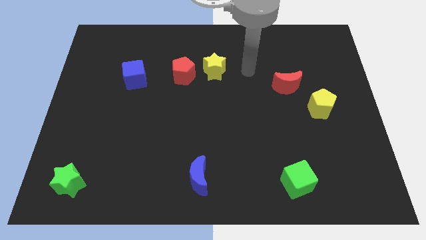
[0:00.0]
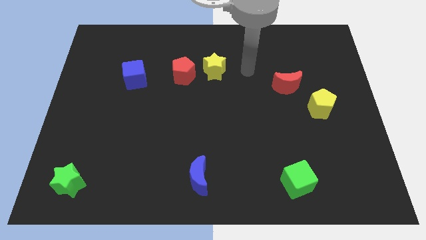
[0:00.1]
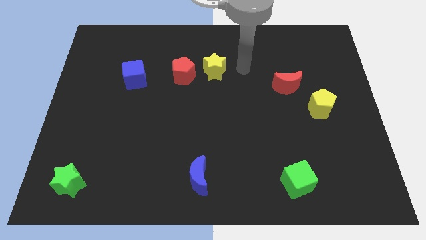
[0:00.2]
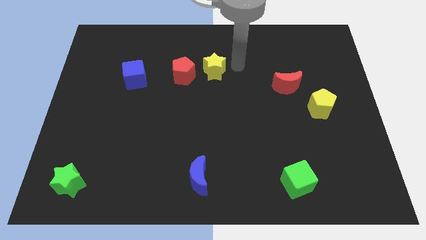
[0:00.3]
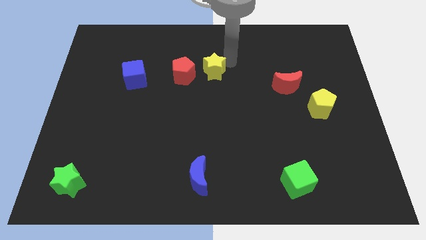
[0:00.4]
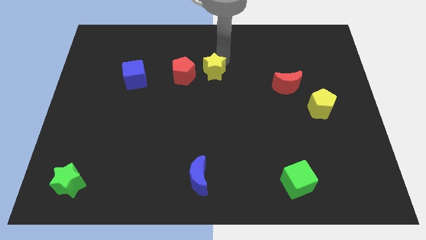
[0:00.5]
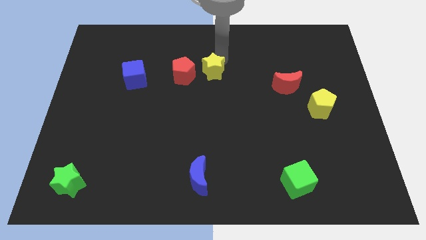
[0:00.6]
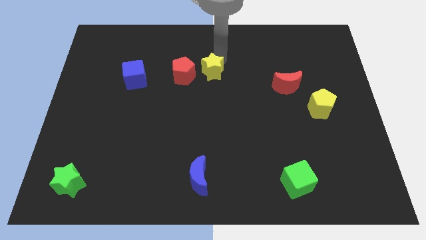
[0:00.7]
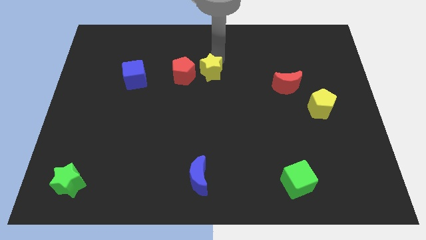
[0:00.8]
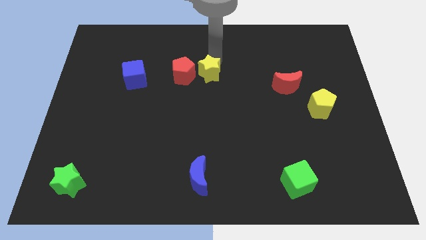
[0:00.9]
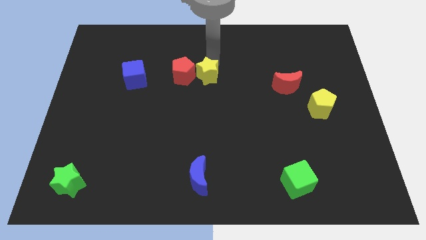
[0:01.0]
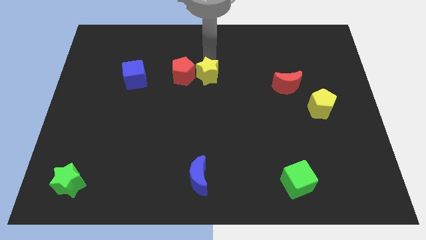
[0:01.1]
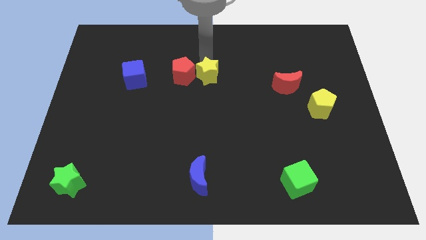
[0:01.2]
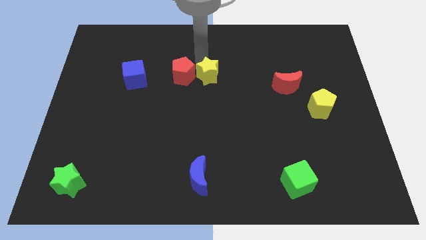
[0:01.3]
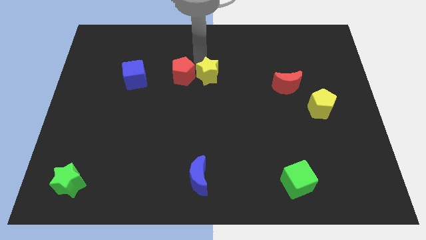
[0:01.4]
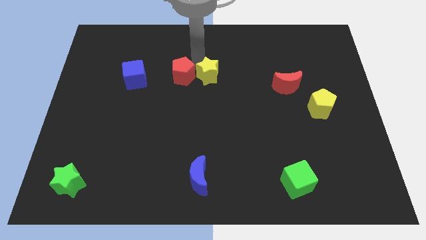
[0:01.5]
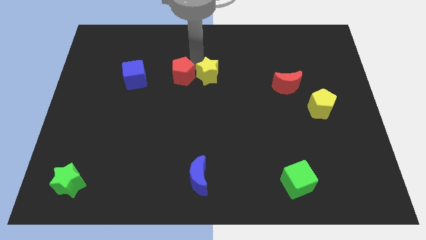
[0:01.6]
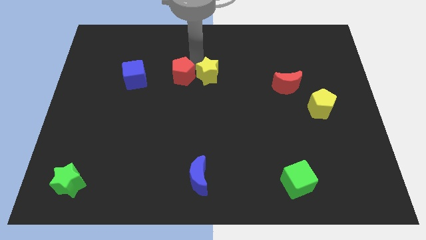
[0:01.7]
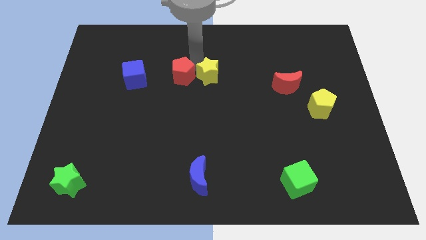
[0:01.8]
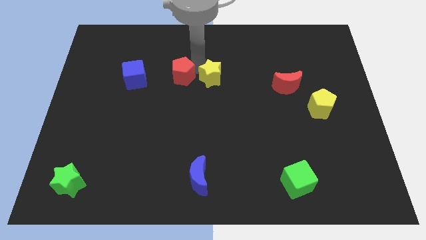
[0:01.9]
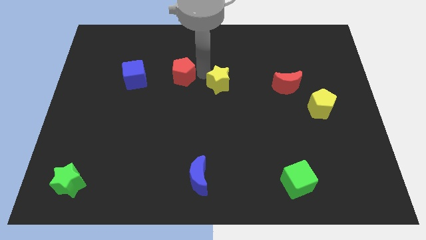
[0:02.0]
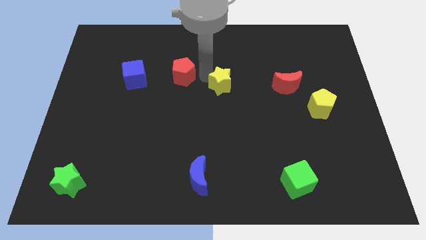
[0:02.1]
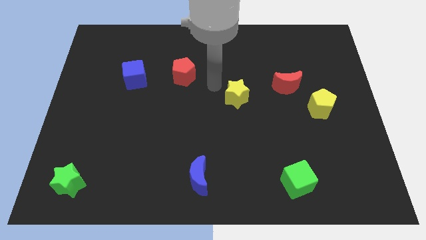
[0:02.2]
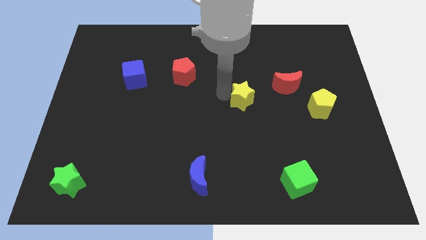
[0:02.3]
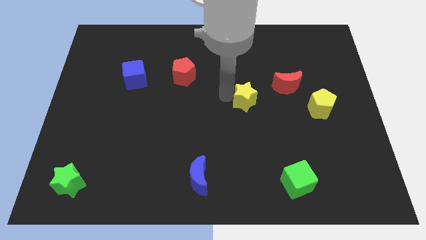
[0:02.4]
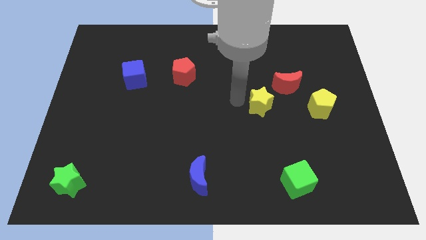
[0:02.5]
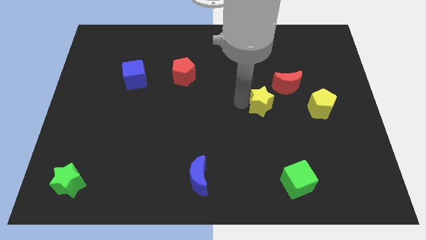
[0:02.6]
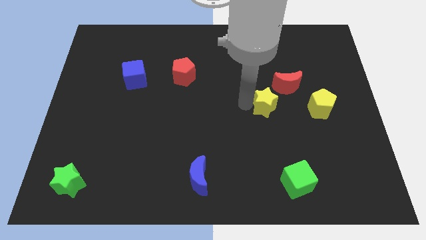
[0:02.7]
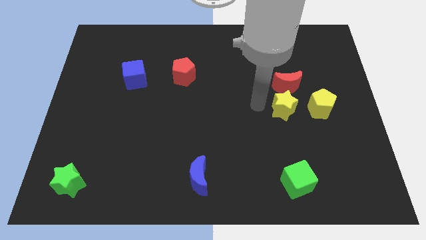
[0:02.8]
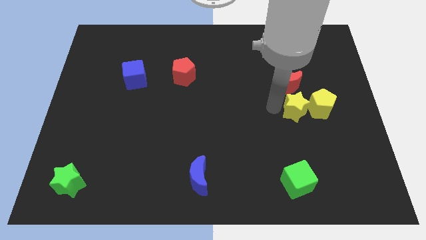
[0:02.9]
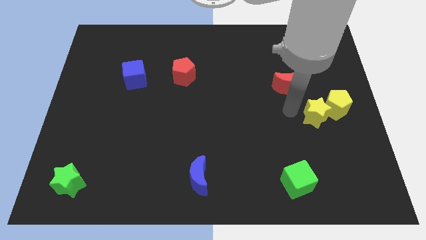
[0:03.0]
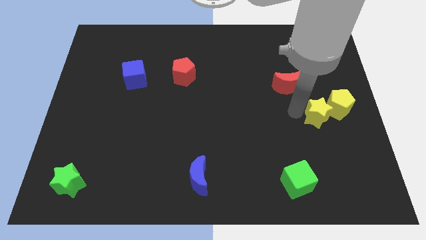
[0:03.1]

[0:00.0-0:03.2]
move the yellow star to the left of the yellow pentagon

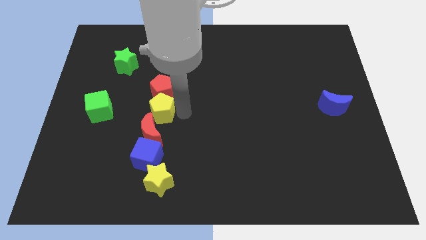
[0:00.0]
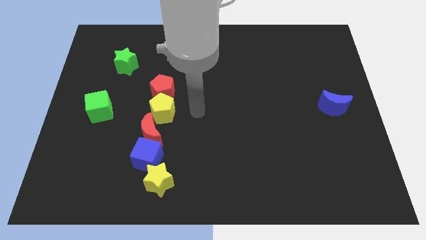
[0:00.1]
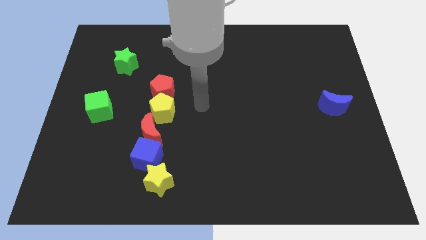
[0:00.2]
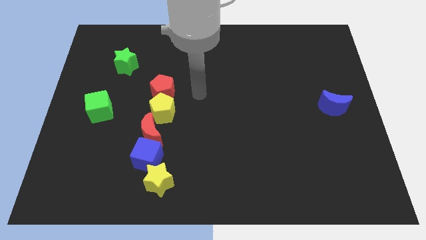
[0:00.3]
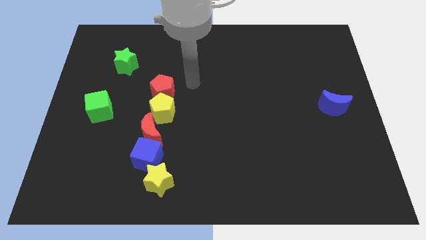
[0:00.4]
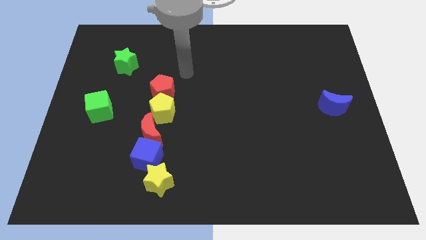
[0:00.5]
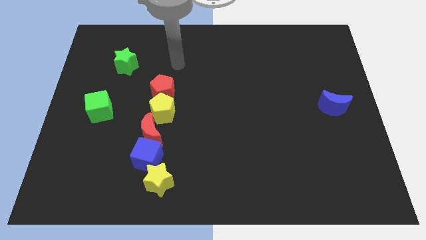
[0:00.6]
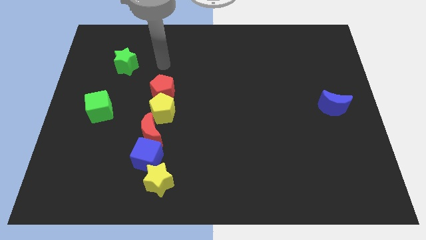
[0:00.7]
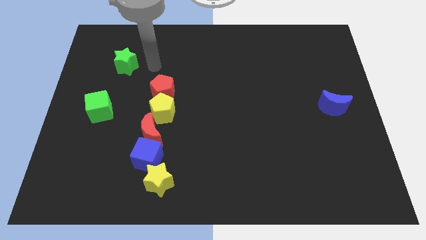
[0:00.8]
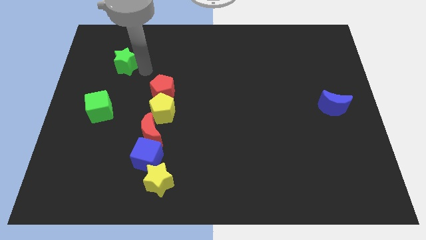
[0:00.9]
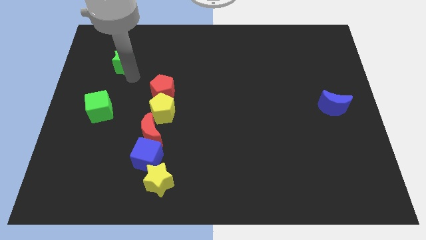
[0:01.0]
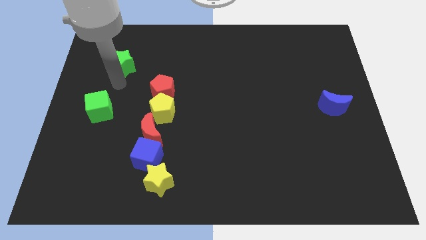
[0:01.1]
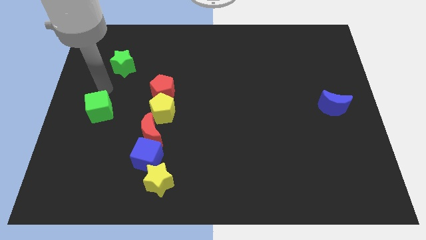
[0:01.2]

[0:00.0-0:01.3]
drag your arm away from the yellow pentagon

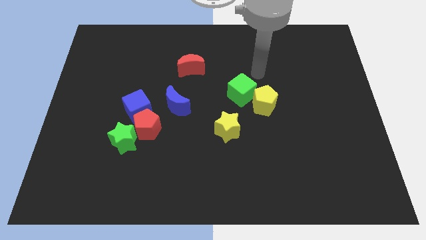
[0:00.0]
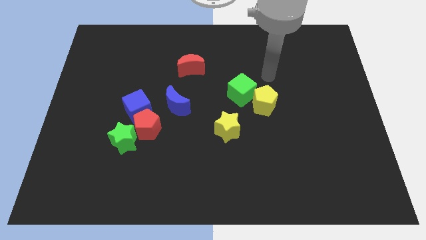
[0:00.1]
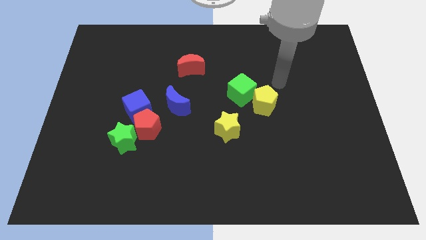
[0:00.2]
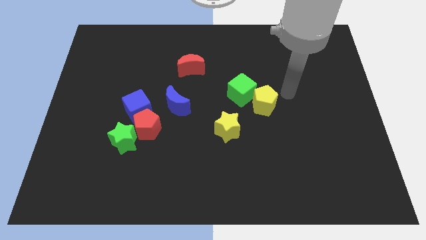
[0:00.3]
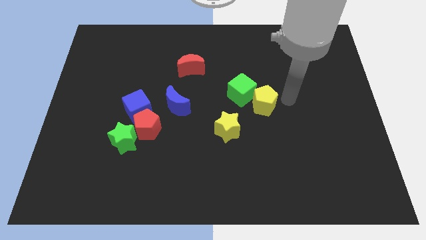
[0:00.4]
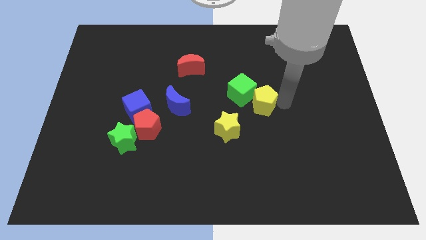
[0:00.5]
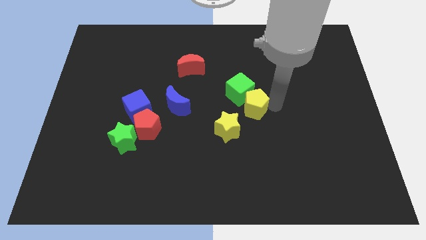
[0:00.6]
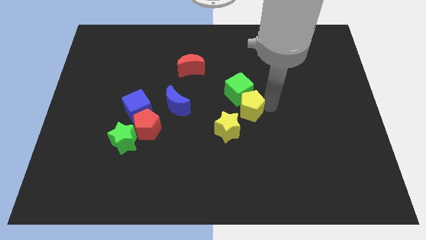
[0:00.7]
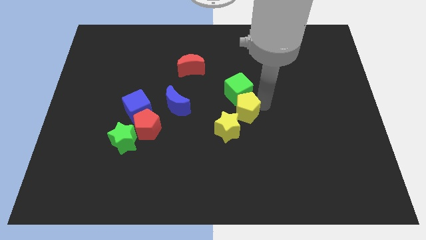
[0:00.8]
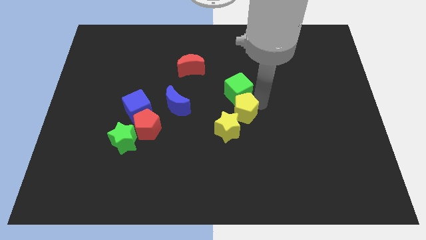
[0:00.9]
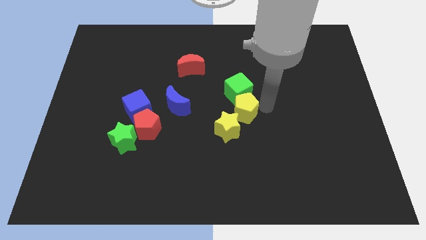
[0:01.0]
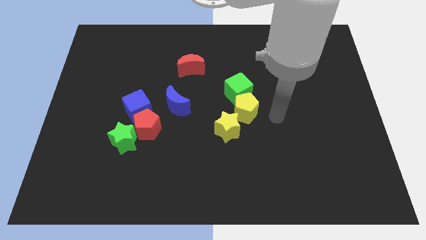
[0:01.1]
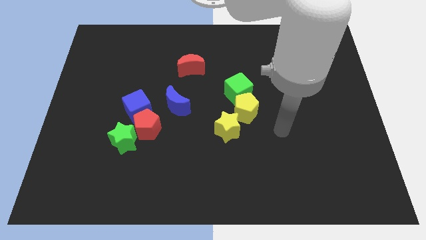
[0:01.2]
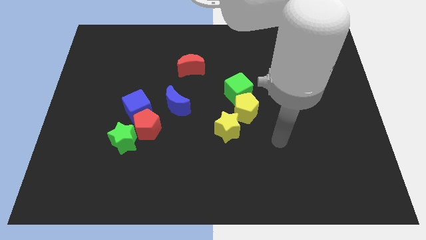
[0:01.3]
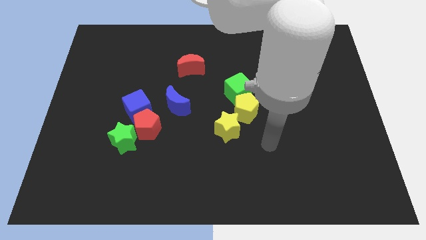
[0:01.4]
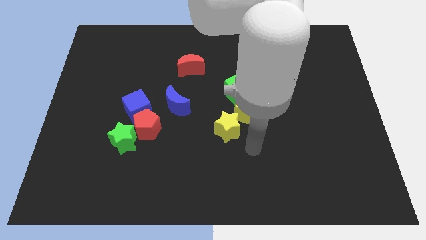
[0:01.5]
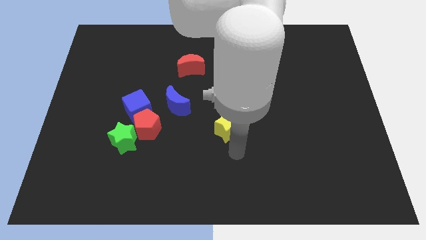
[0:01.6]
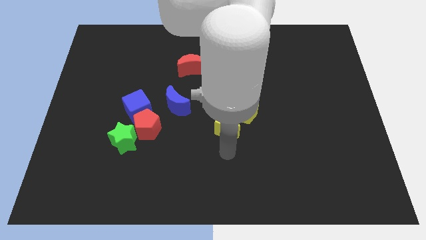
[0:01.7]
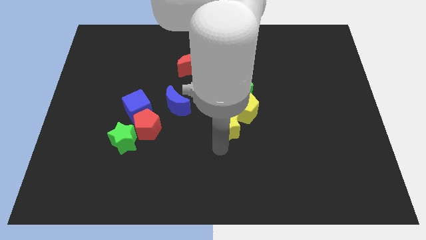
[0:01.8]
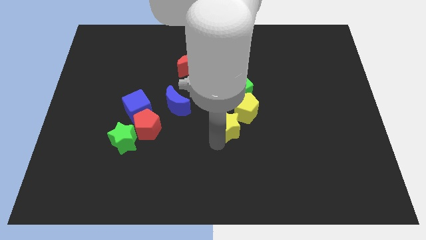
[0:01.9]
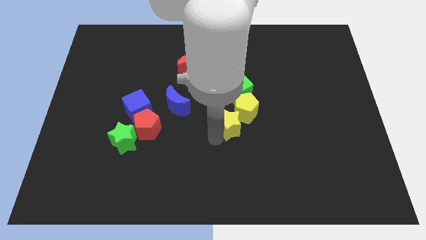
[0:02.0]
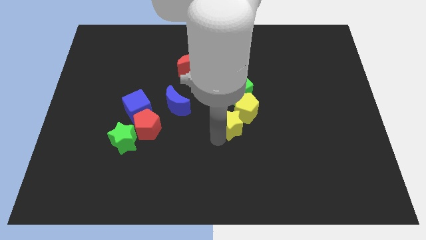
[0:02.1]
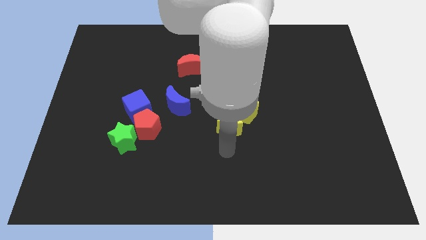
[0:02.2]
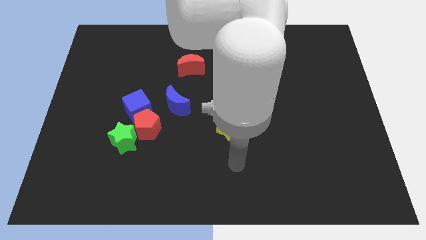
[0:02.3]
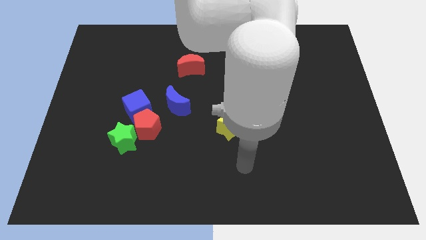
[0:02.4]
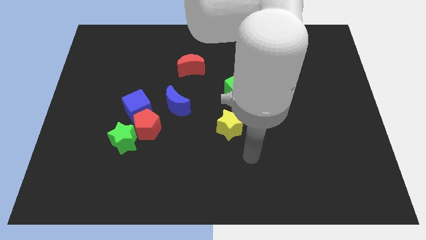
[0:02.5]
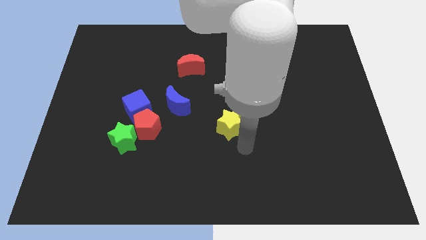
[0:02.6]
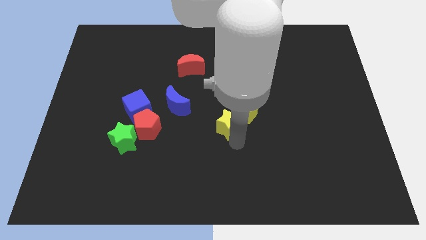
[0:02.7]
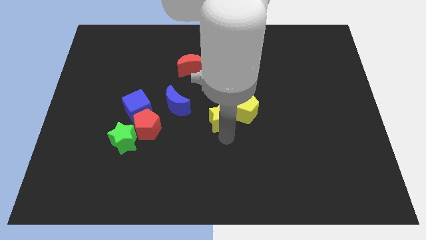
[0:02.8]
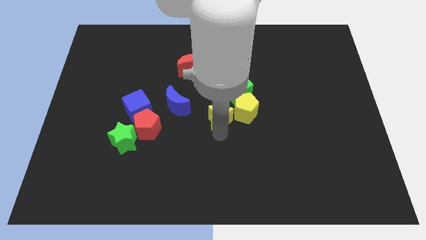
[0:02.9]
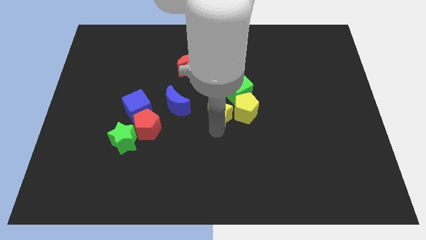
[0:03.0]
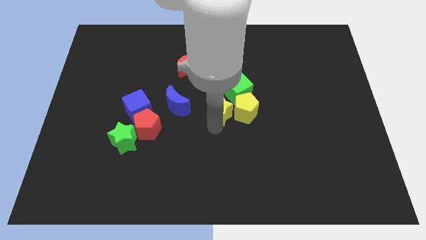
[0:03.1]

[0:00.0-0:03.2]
move the yellow star to the left side of the yellow pentagon

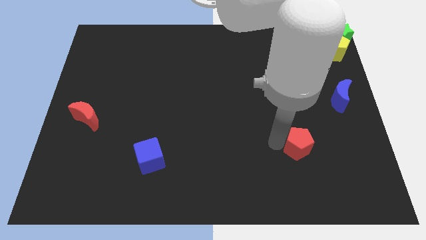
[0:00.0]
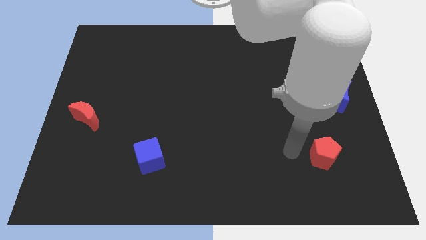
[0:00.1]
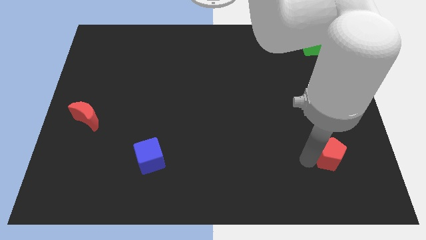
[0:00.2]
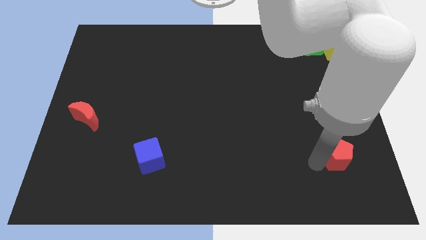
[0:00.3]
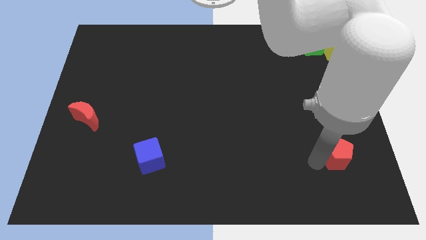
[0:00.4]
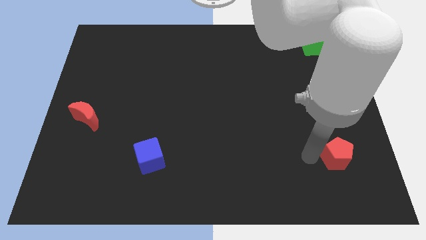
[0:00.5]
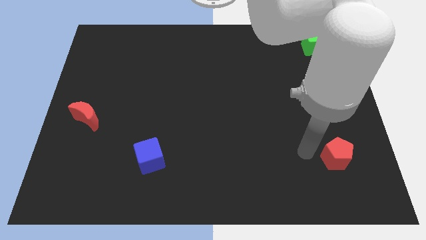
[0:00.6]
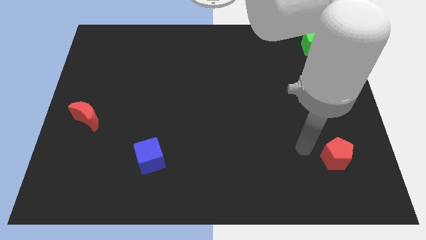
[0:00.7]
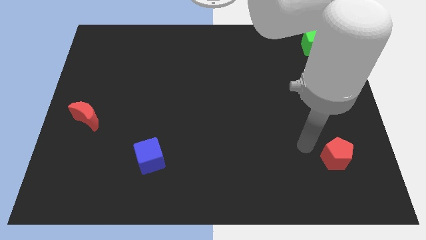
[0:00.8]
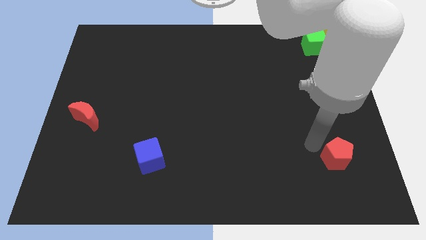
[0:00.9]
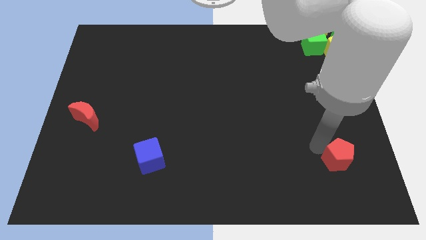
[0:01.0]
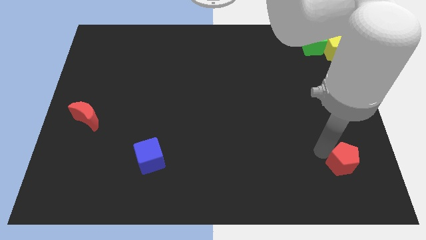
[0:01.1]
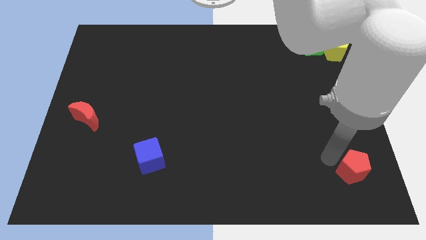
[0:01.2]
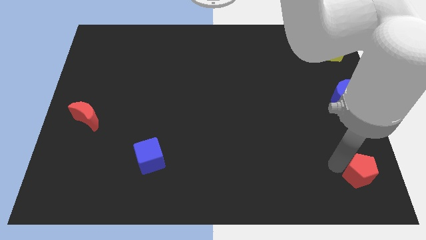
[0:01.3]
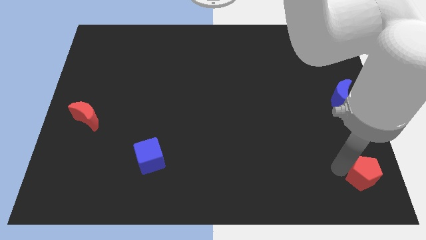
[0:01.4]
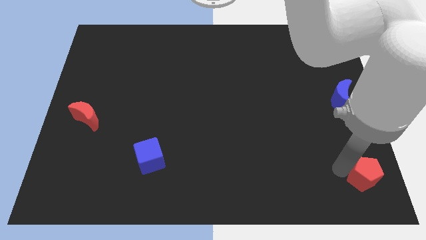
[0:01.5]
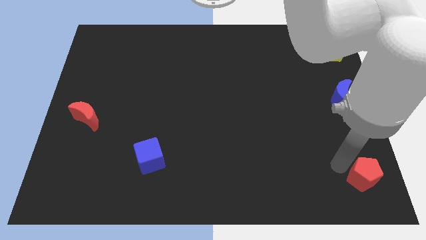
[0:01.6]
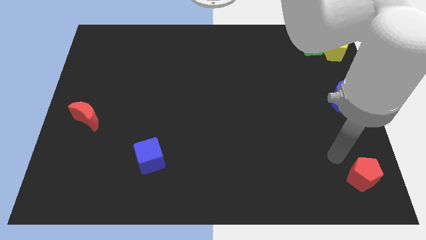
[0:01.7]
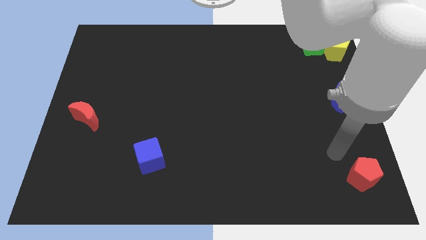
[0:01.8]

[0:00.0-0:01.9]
place the red pentagon below the blue moon
